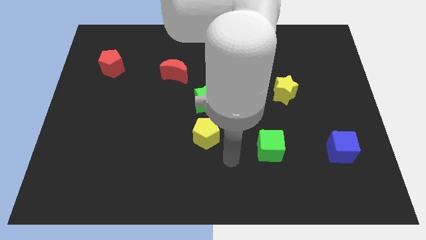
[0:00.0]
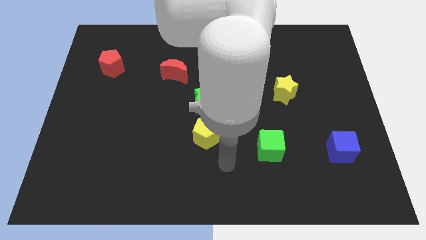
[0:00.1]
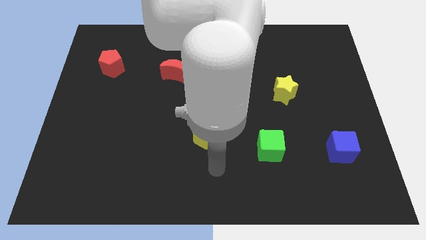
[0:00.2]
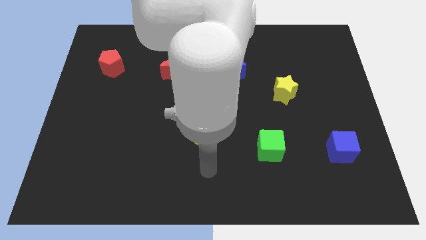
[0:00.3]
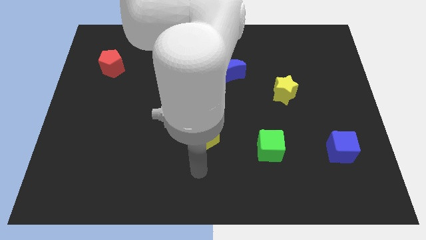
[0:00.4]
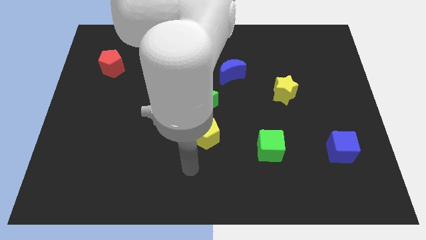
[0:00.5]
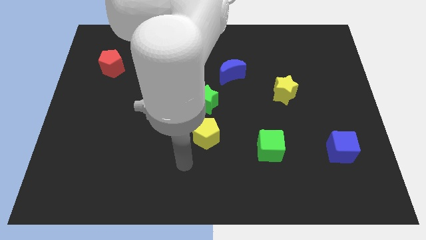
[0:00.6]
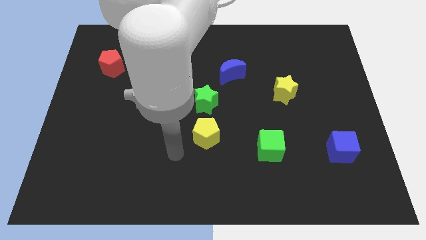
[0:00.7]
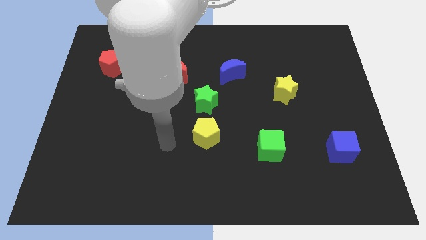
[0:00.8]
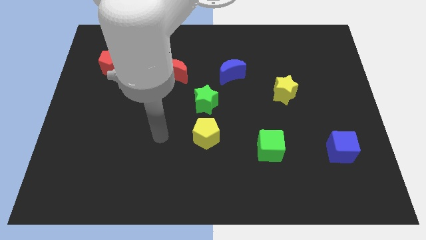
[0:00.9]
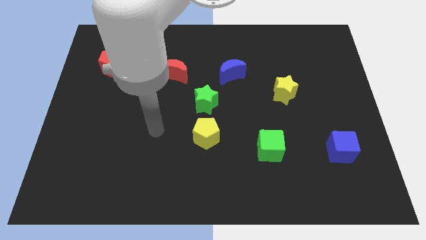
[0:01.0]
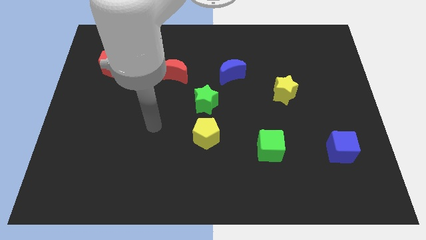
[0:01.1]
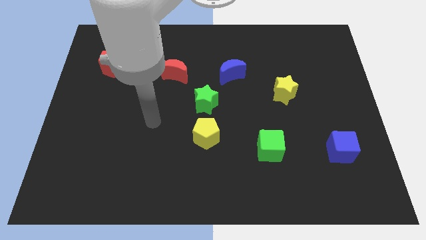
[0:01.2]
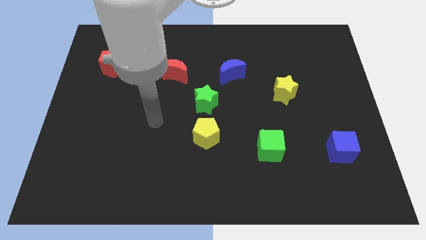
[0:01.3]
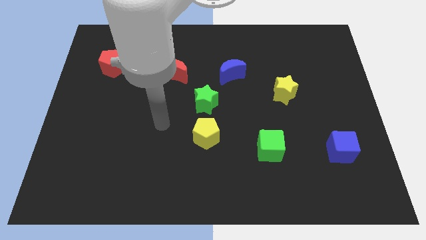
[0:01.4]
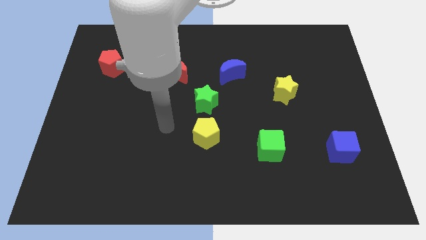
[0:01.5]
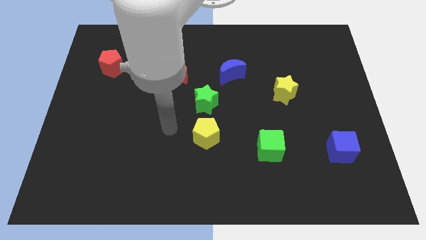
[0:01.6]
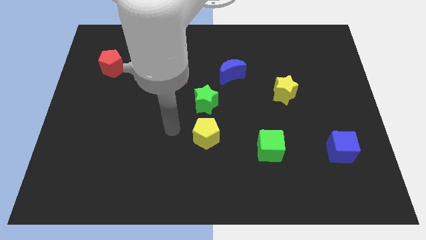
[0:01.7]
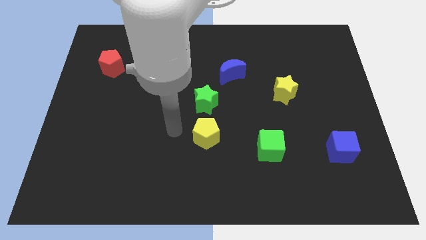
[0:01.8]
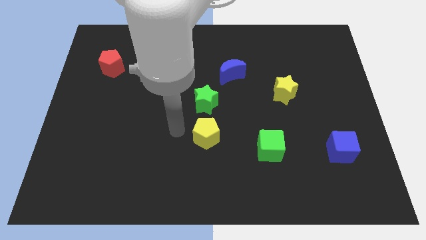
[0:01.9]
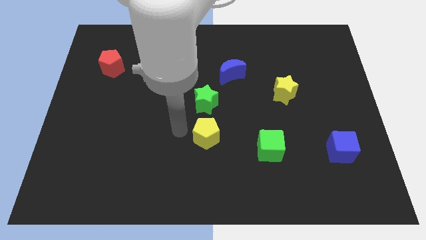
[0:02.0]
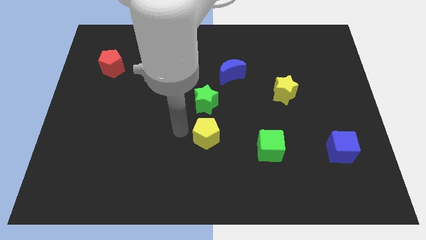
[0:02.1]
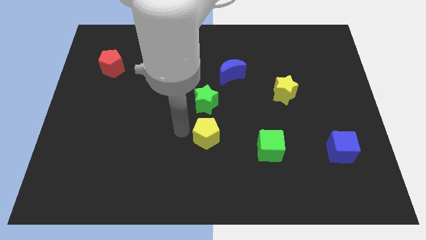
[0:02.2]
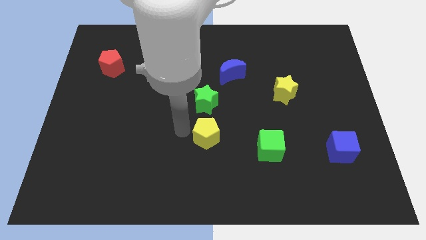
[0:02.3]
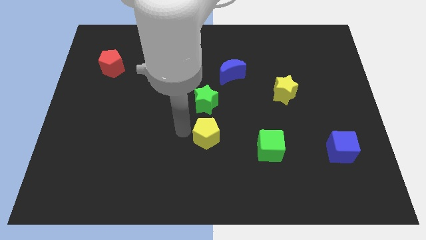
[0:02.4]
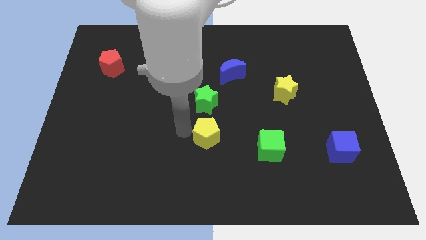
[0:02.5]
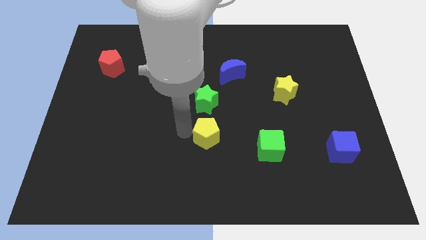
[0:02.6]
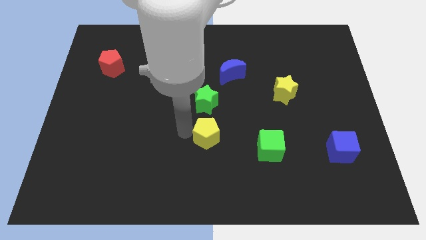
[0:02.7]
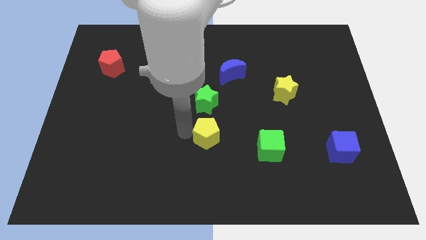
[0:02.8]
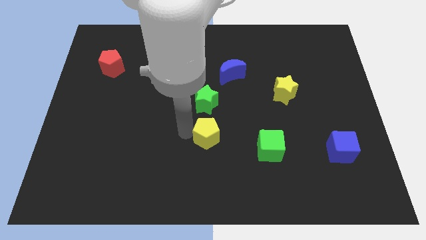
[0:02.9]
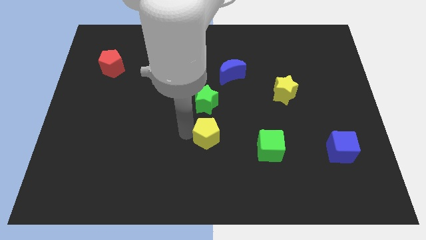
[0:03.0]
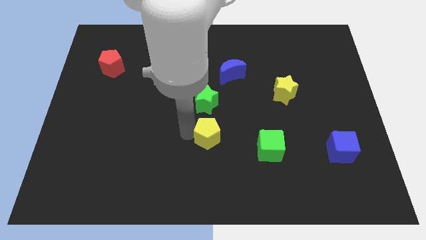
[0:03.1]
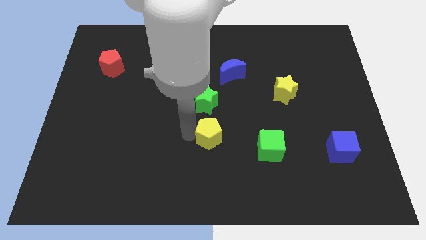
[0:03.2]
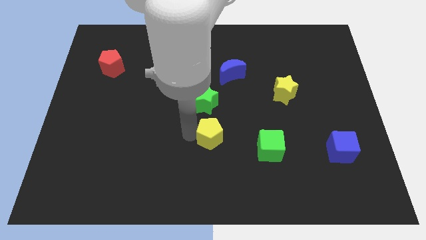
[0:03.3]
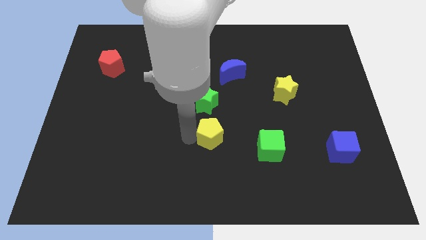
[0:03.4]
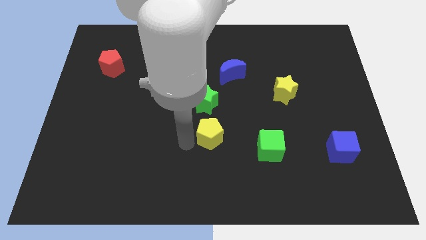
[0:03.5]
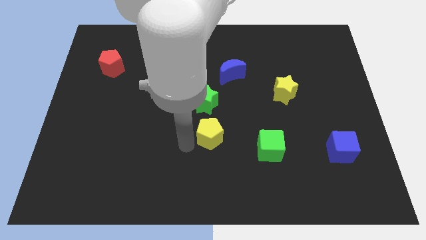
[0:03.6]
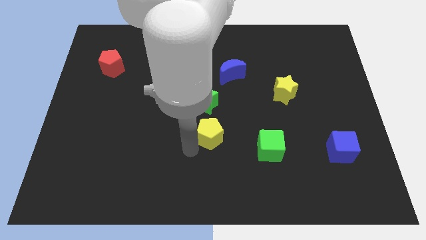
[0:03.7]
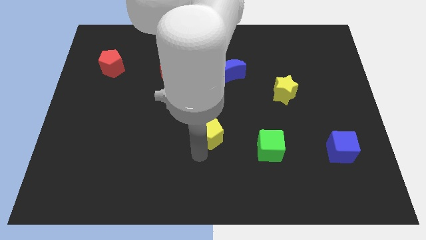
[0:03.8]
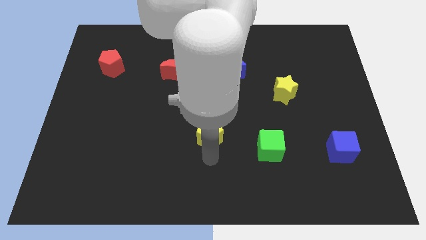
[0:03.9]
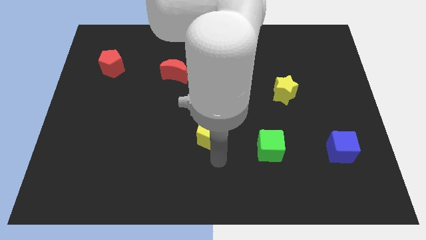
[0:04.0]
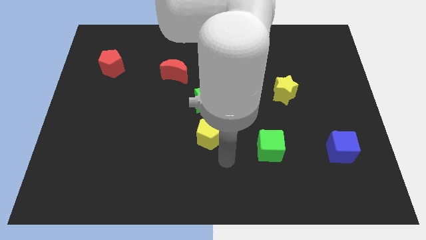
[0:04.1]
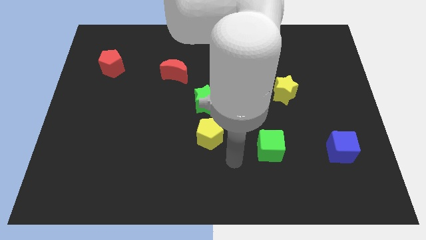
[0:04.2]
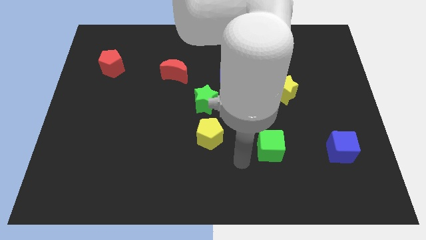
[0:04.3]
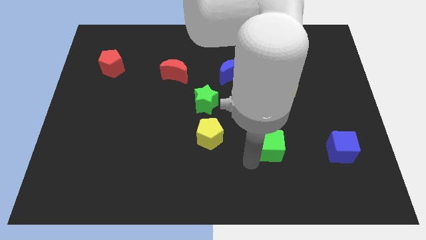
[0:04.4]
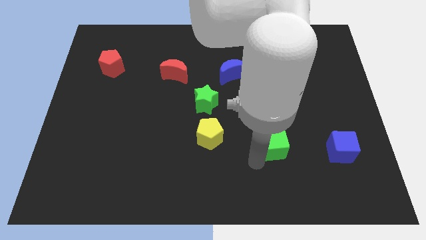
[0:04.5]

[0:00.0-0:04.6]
move your hand to the bottom left side of the green cube

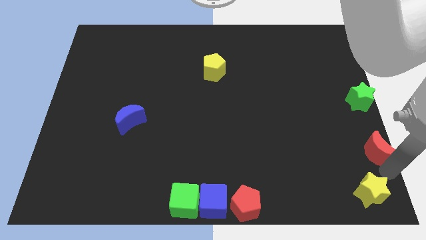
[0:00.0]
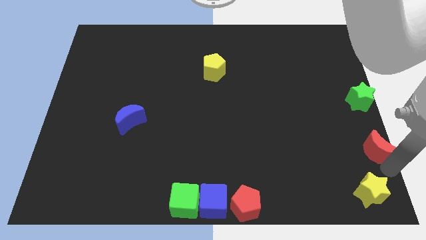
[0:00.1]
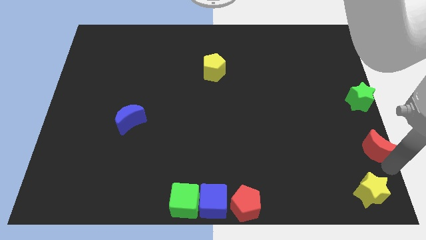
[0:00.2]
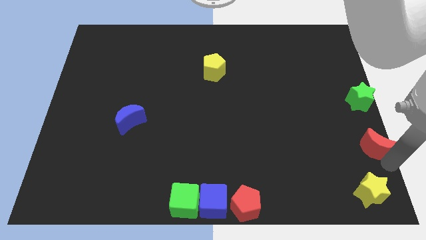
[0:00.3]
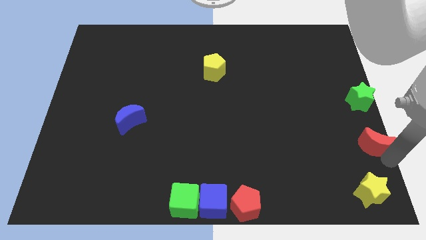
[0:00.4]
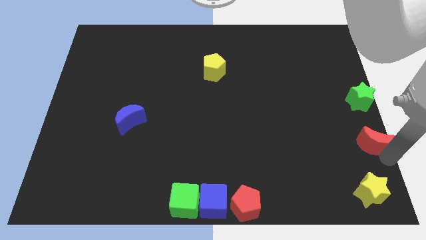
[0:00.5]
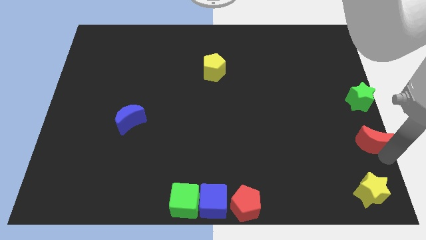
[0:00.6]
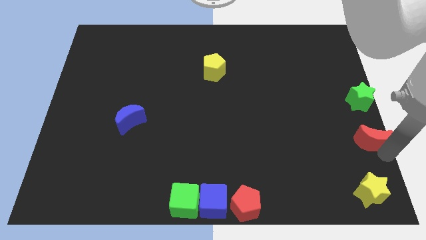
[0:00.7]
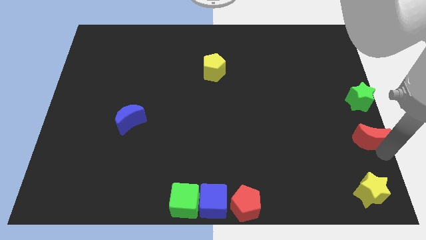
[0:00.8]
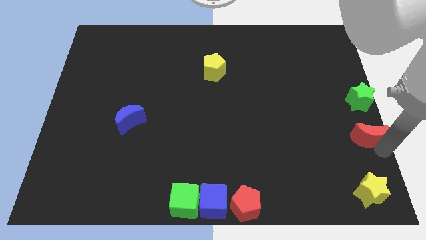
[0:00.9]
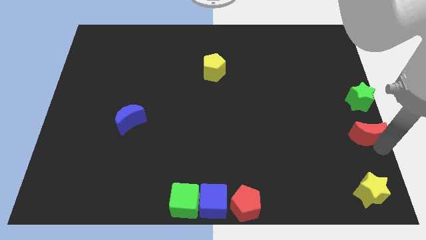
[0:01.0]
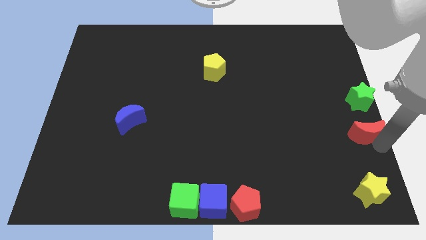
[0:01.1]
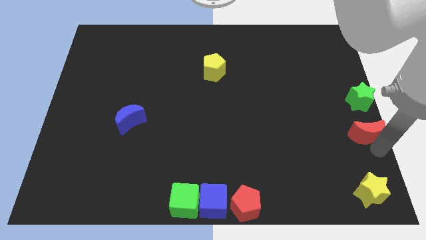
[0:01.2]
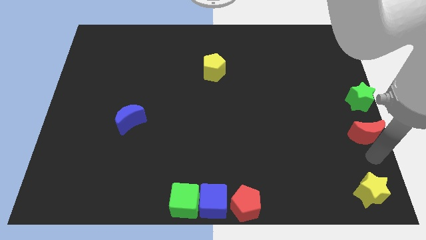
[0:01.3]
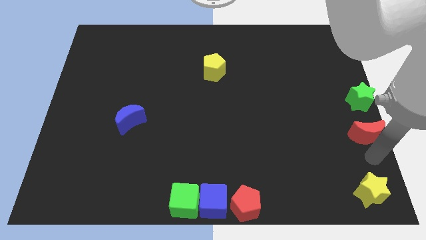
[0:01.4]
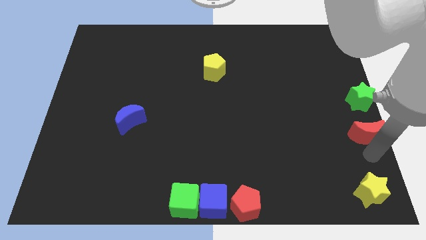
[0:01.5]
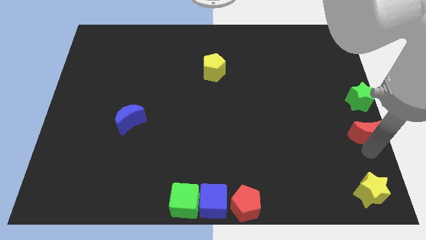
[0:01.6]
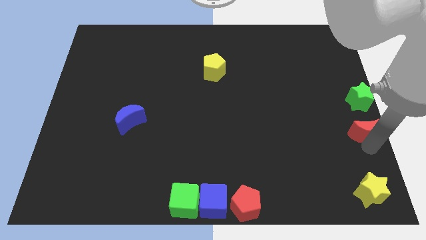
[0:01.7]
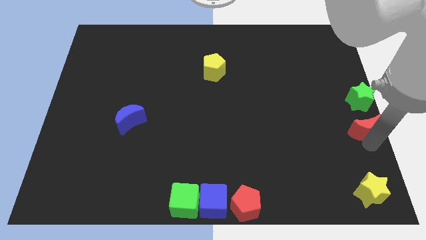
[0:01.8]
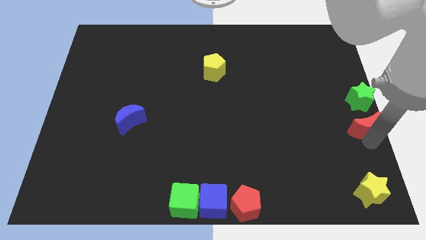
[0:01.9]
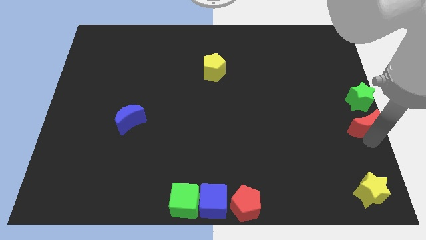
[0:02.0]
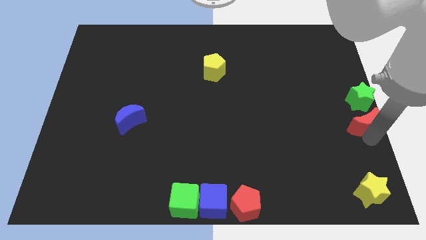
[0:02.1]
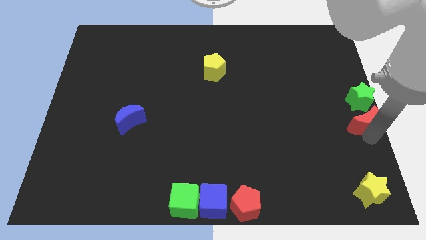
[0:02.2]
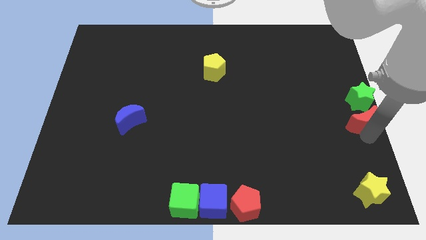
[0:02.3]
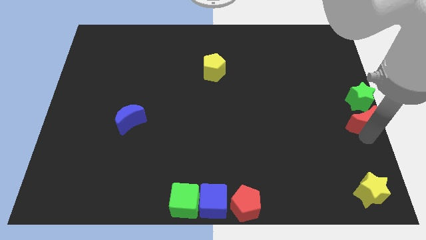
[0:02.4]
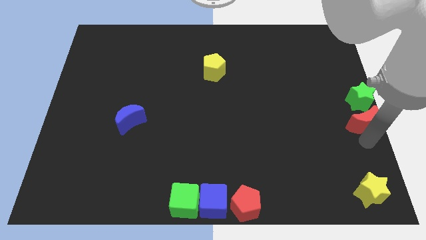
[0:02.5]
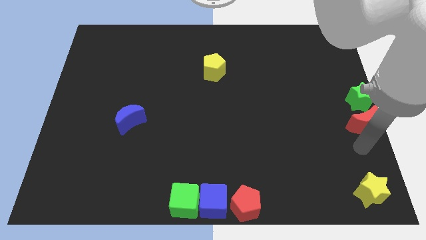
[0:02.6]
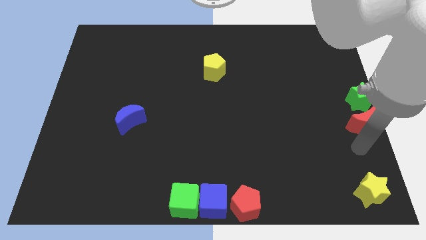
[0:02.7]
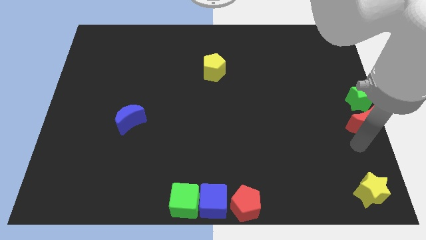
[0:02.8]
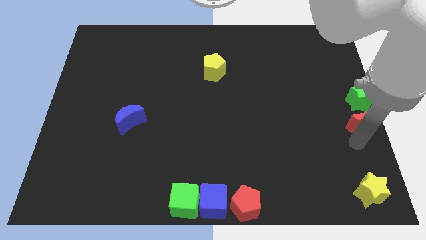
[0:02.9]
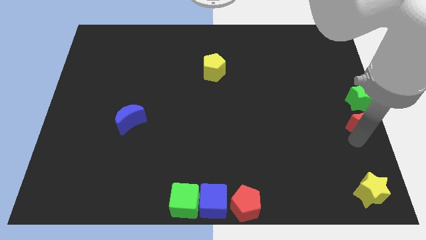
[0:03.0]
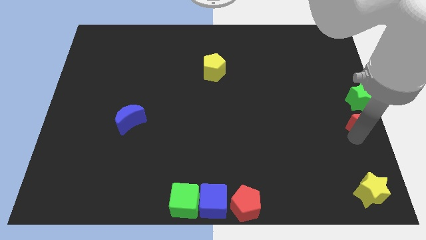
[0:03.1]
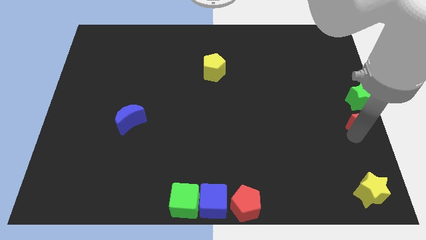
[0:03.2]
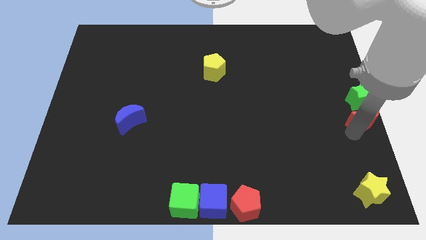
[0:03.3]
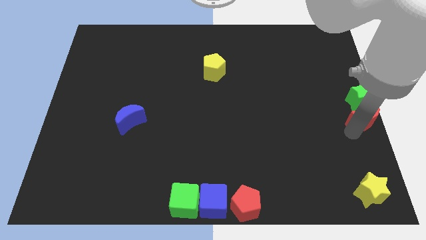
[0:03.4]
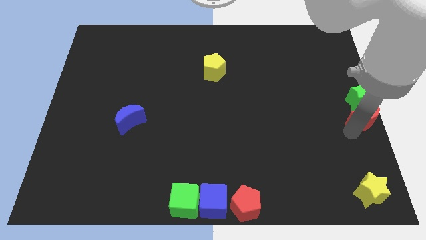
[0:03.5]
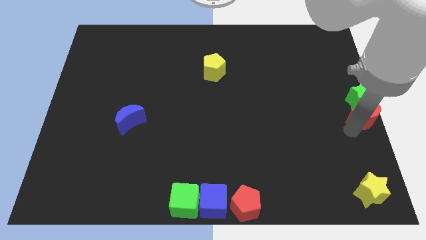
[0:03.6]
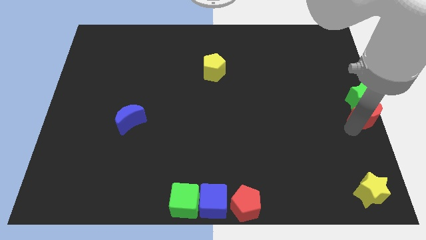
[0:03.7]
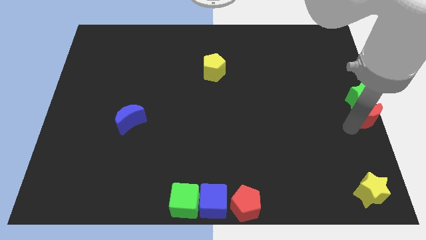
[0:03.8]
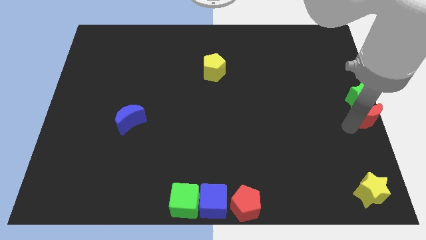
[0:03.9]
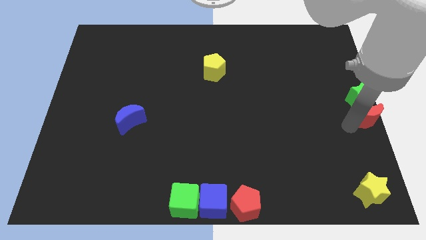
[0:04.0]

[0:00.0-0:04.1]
push red moon towards green star

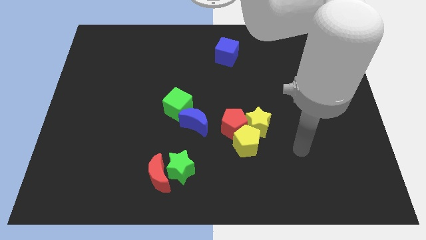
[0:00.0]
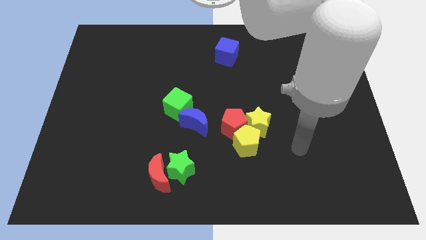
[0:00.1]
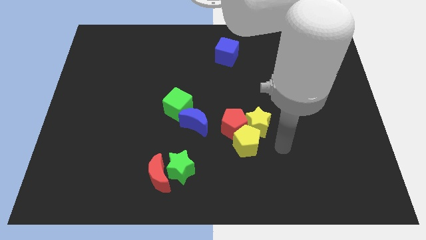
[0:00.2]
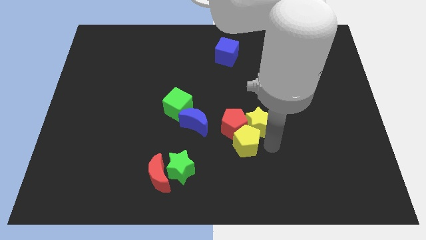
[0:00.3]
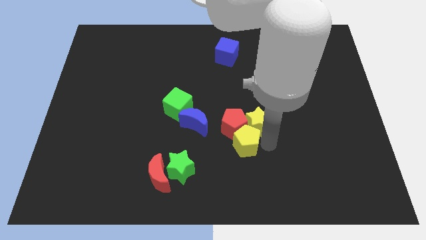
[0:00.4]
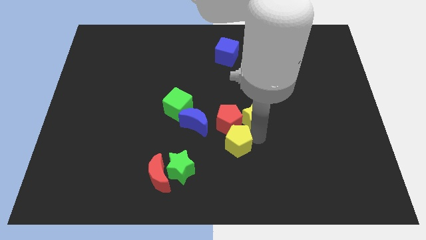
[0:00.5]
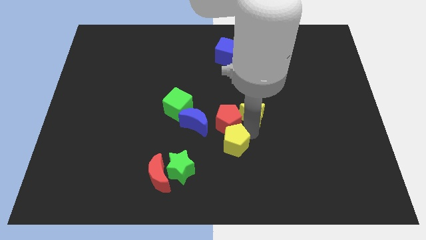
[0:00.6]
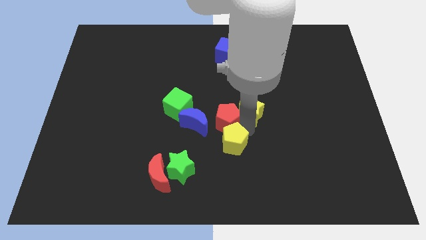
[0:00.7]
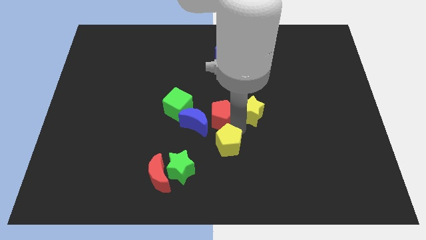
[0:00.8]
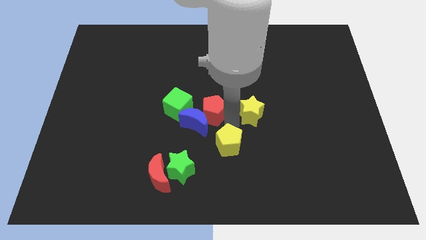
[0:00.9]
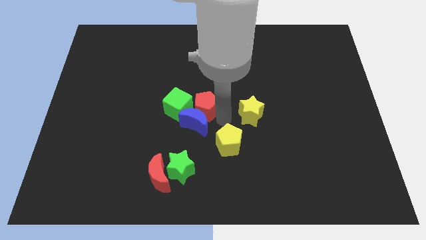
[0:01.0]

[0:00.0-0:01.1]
separate the red pentagon from yellow pentagon and yellow star
